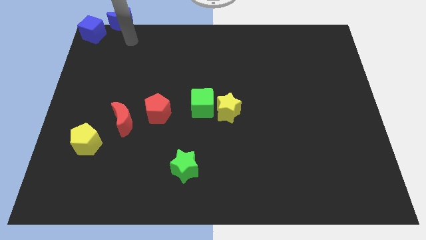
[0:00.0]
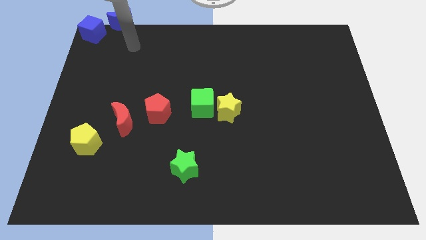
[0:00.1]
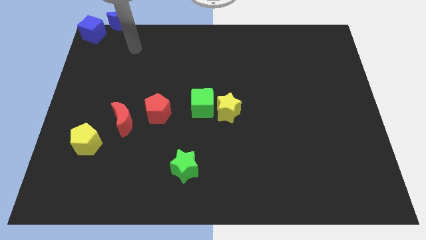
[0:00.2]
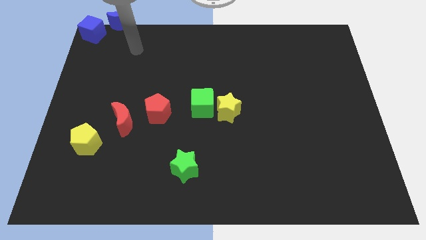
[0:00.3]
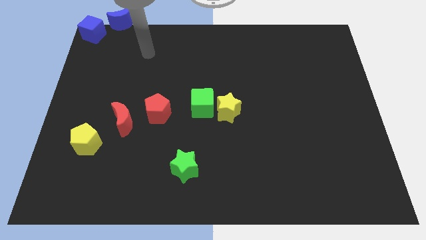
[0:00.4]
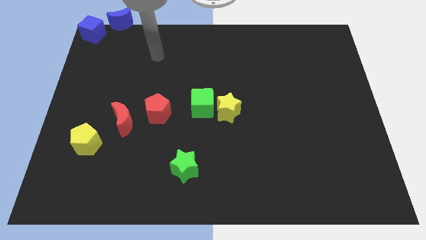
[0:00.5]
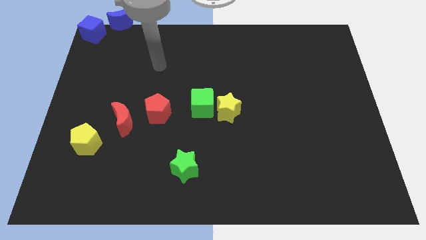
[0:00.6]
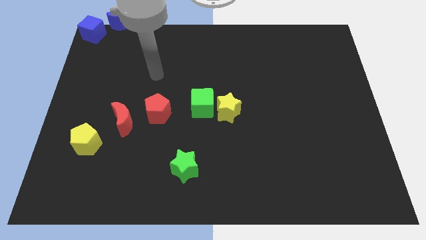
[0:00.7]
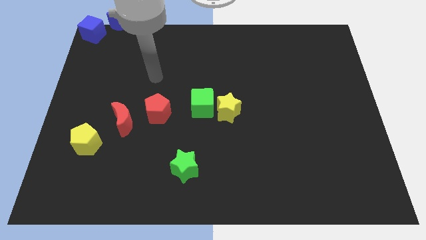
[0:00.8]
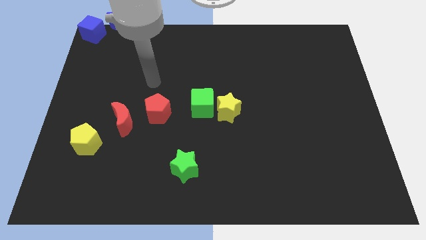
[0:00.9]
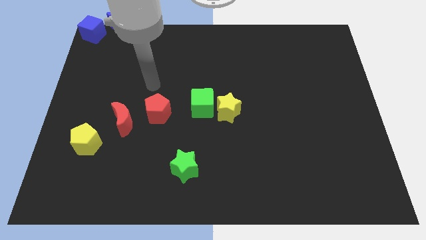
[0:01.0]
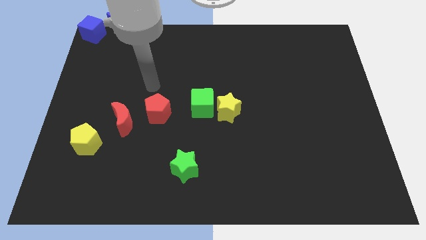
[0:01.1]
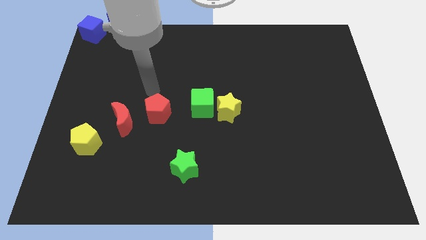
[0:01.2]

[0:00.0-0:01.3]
move your arm to the top of the red pentagon

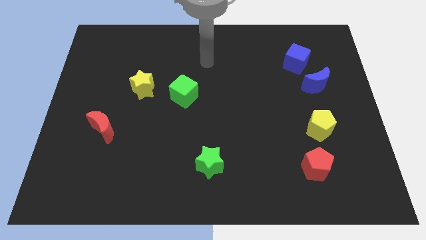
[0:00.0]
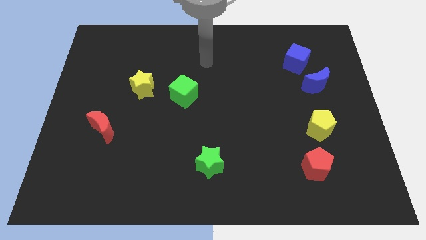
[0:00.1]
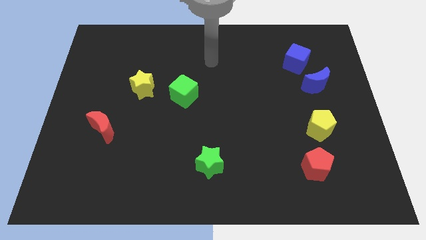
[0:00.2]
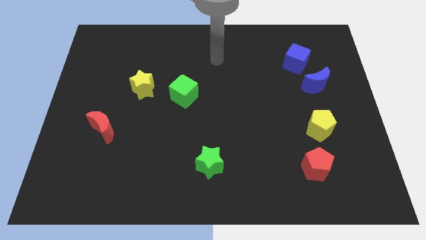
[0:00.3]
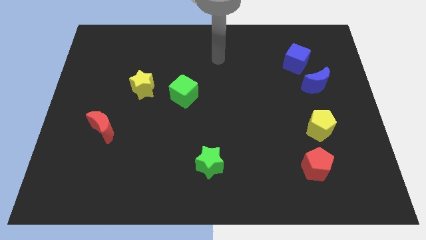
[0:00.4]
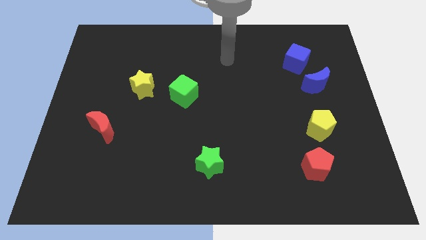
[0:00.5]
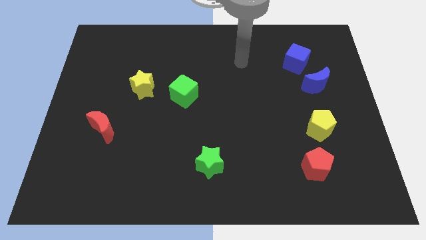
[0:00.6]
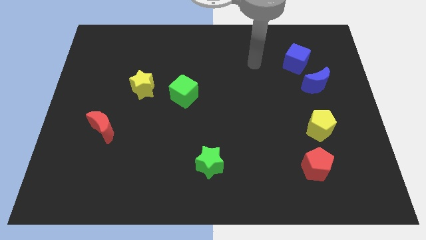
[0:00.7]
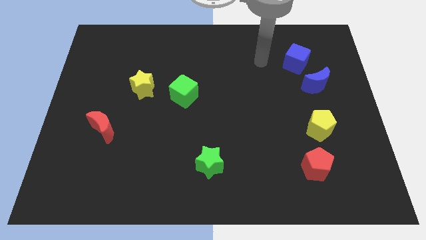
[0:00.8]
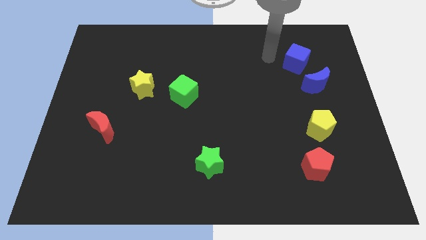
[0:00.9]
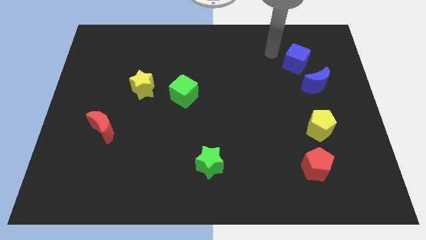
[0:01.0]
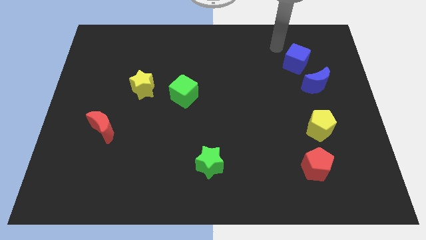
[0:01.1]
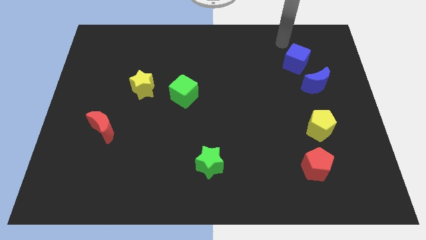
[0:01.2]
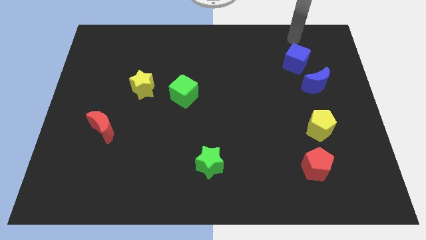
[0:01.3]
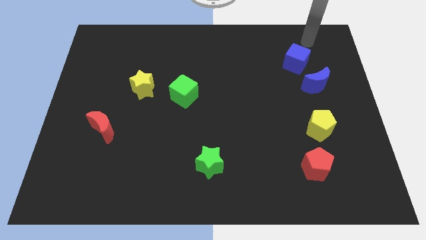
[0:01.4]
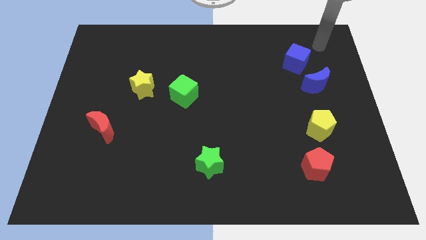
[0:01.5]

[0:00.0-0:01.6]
move your arm at the top of the blue cube

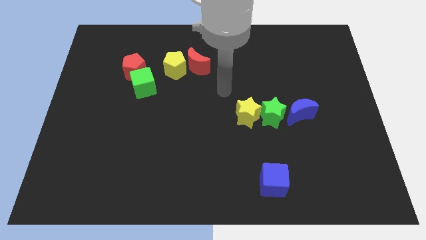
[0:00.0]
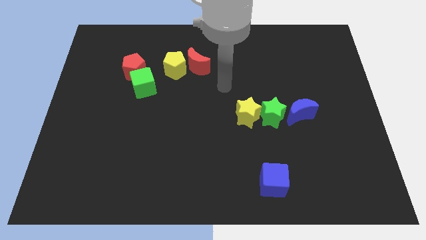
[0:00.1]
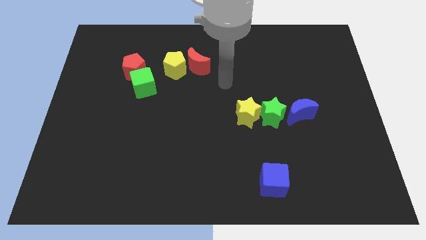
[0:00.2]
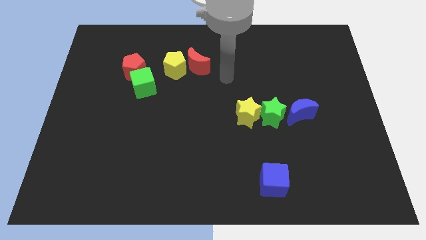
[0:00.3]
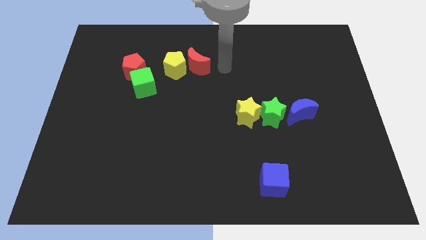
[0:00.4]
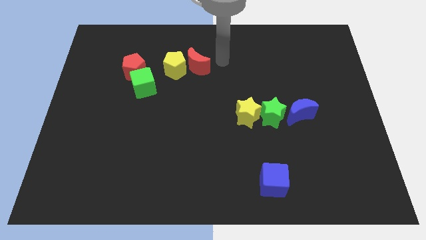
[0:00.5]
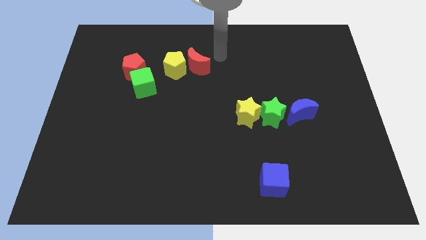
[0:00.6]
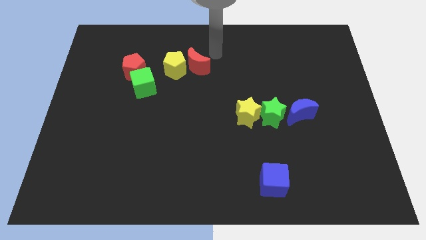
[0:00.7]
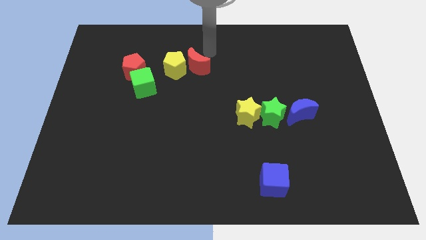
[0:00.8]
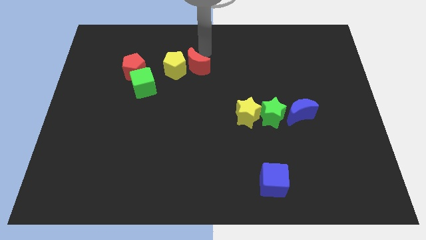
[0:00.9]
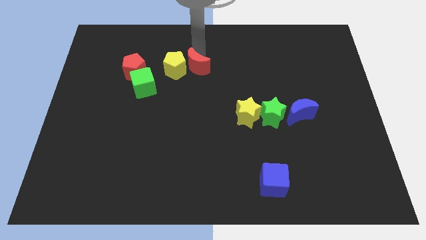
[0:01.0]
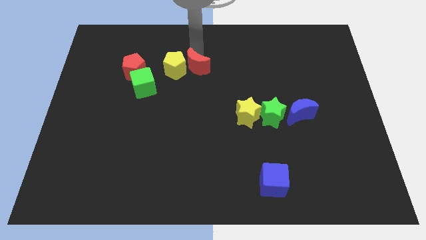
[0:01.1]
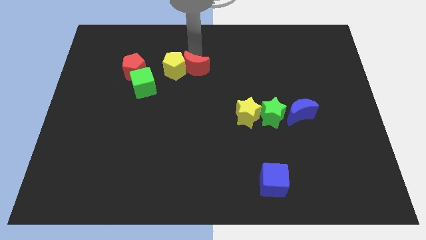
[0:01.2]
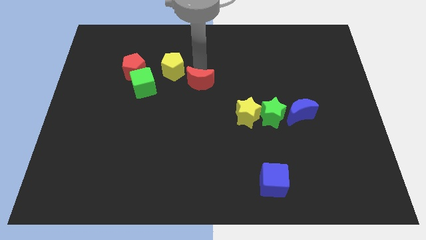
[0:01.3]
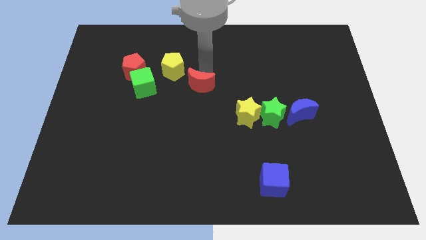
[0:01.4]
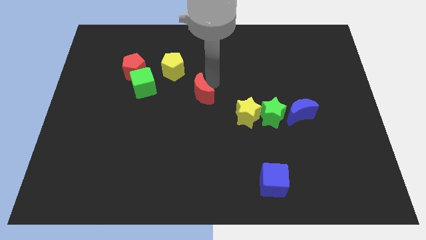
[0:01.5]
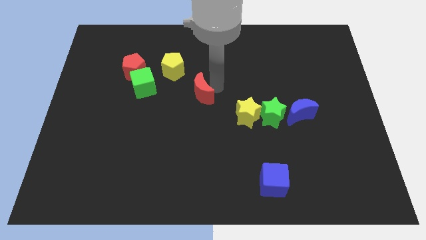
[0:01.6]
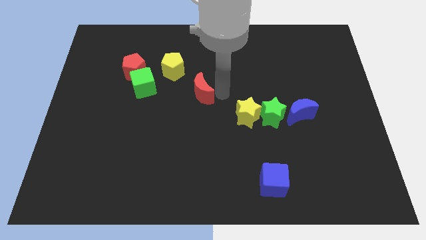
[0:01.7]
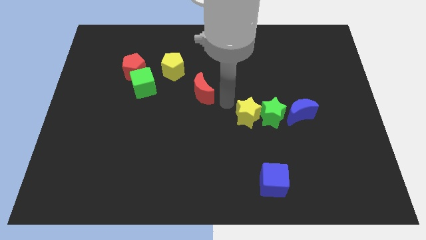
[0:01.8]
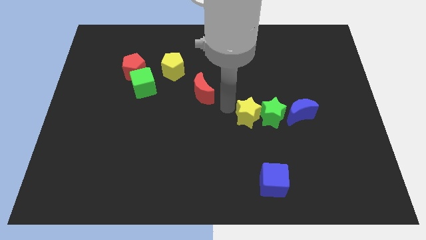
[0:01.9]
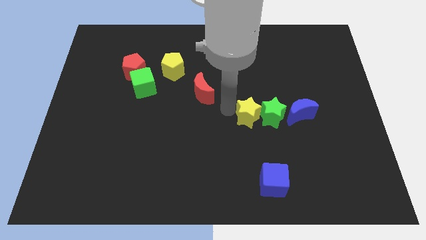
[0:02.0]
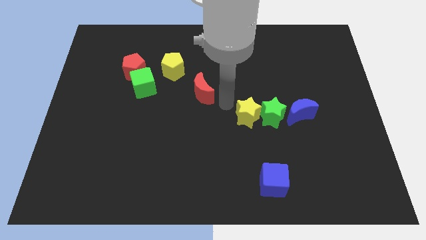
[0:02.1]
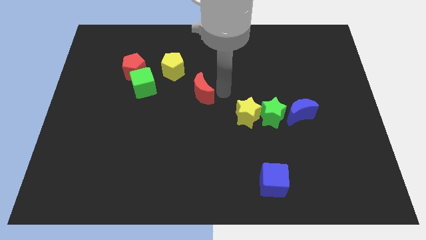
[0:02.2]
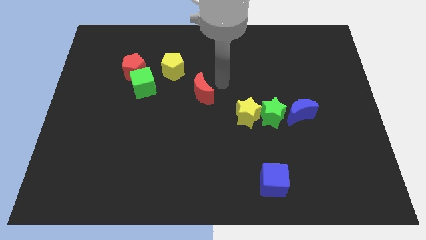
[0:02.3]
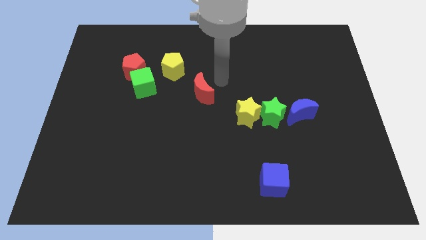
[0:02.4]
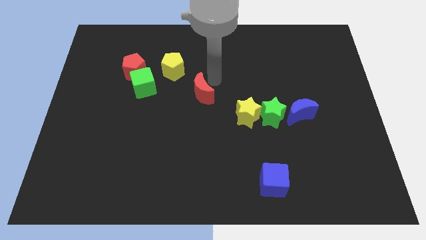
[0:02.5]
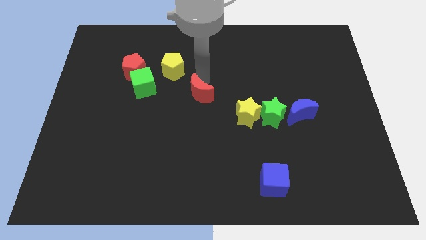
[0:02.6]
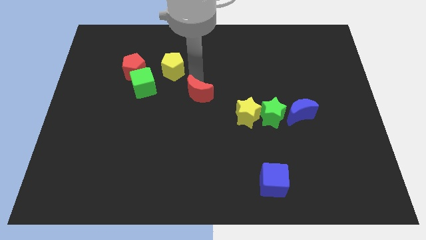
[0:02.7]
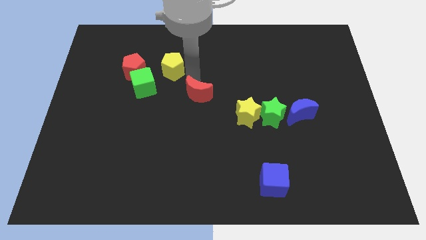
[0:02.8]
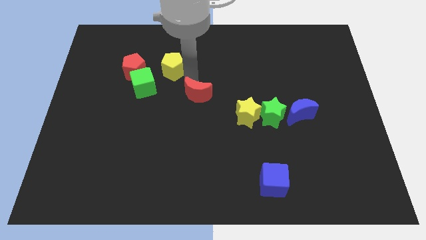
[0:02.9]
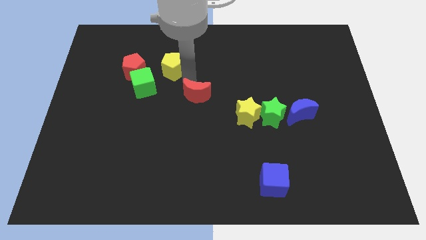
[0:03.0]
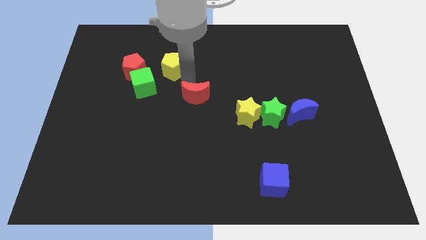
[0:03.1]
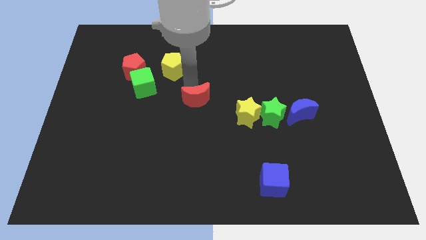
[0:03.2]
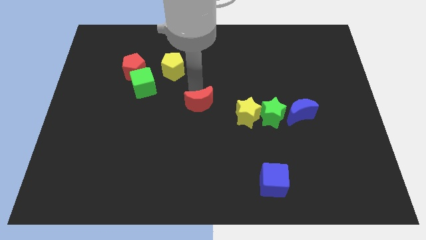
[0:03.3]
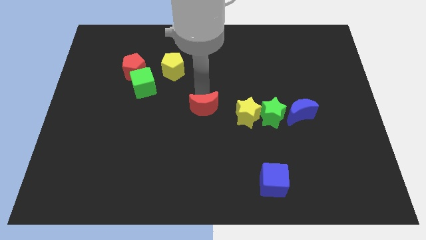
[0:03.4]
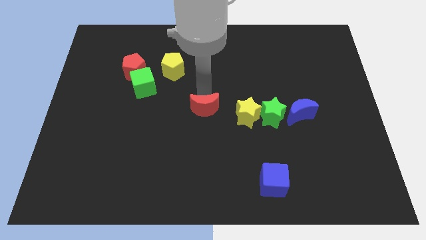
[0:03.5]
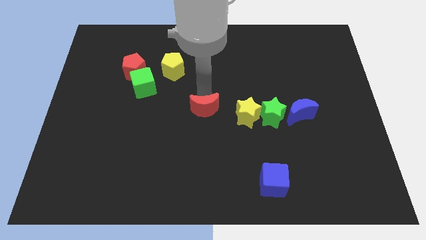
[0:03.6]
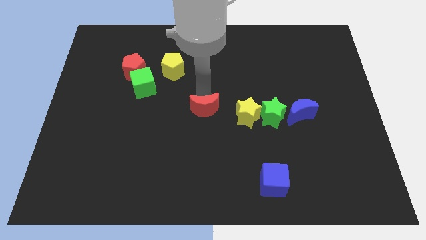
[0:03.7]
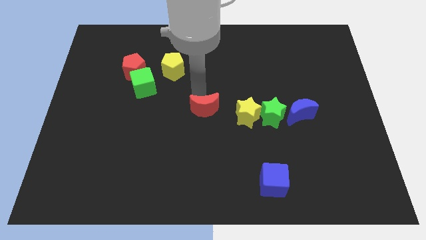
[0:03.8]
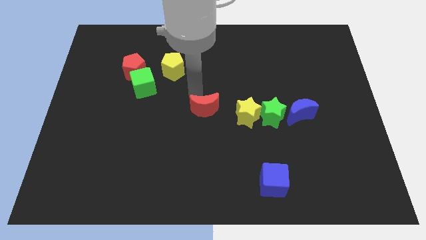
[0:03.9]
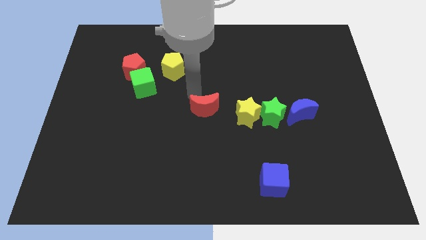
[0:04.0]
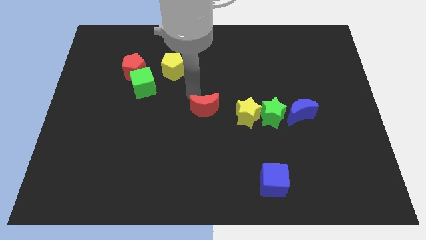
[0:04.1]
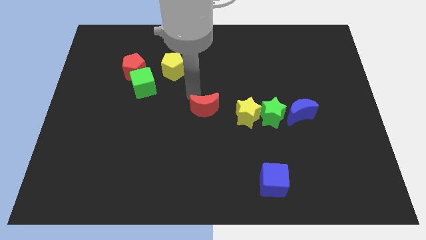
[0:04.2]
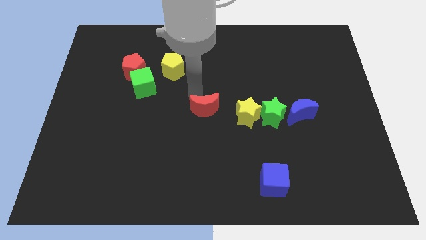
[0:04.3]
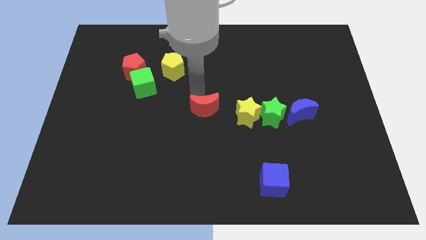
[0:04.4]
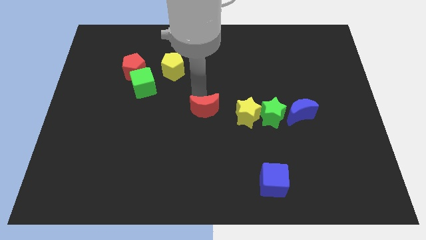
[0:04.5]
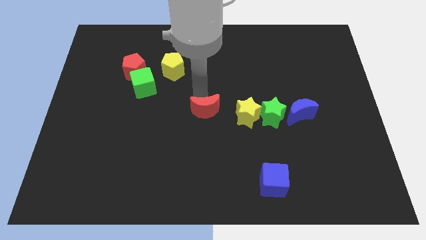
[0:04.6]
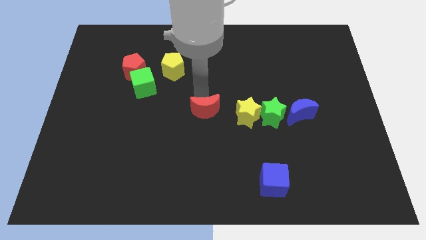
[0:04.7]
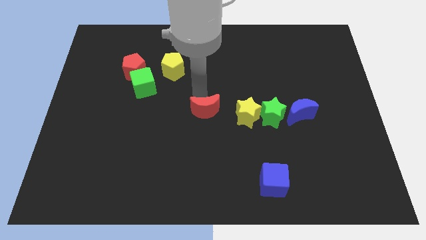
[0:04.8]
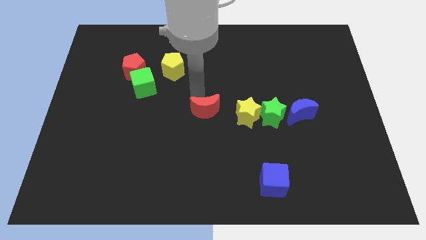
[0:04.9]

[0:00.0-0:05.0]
push the red moon towards the left side of the yellow star

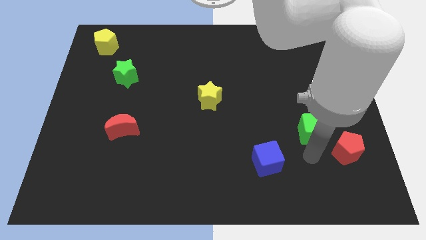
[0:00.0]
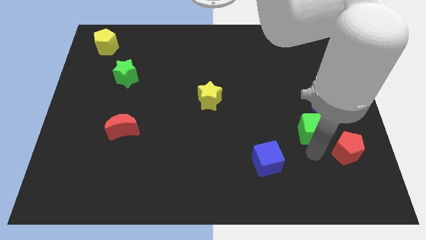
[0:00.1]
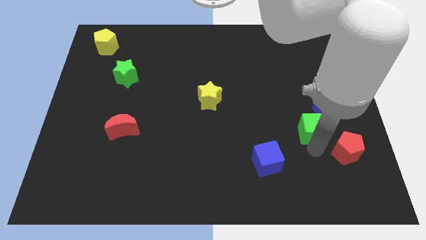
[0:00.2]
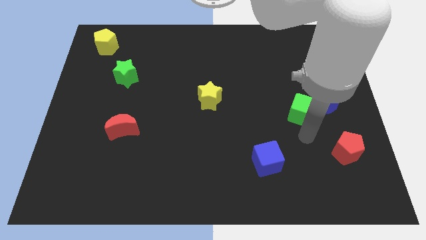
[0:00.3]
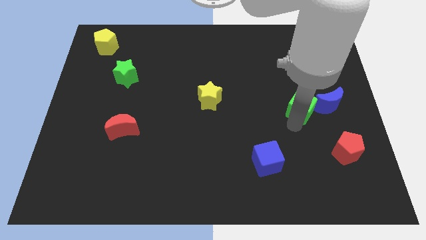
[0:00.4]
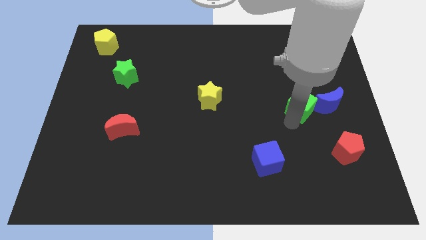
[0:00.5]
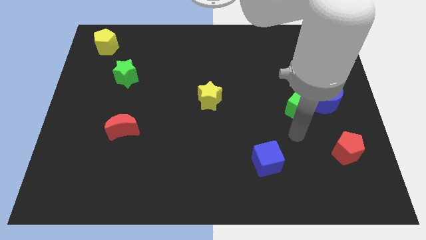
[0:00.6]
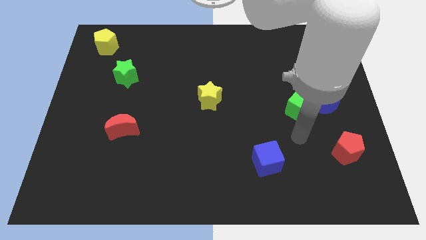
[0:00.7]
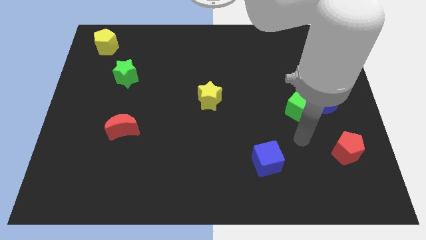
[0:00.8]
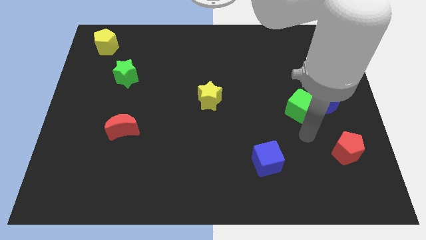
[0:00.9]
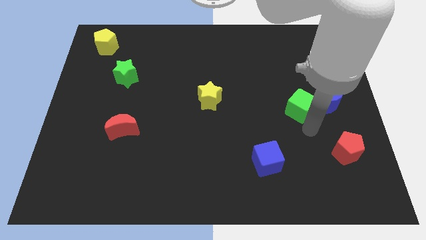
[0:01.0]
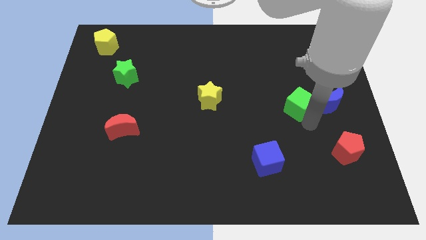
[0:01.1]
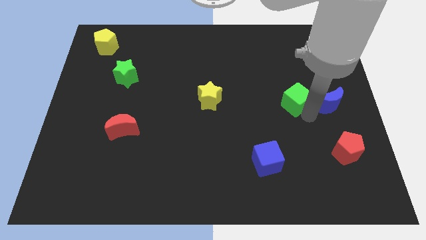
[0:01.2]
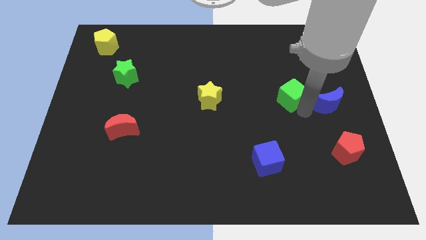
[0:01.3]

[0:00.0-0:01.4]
move the green cube right to the yellow star
